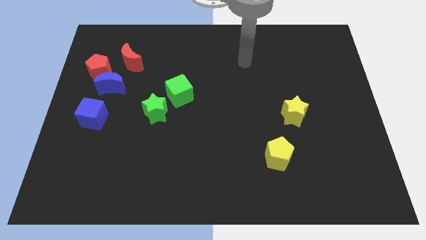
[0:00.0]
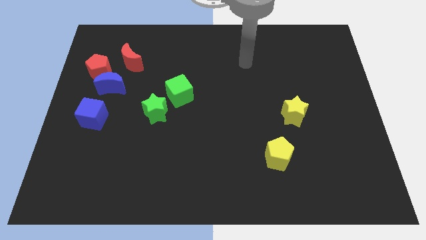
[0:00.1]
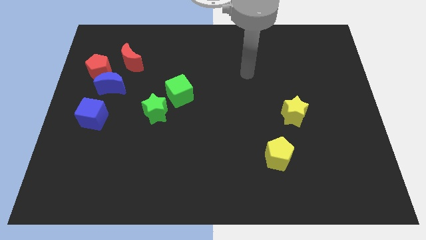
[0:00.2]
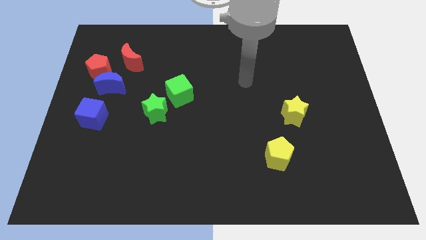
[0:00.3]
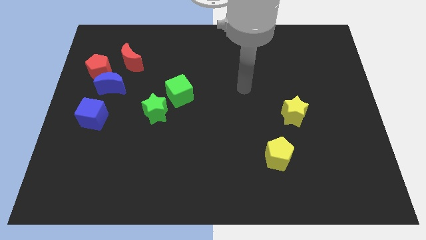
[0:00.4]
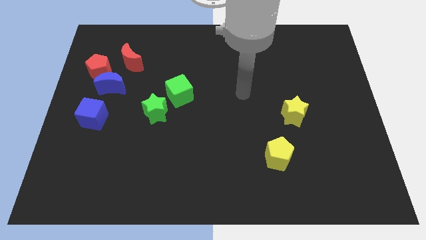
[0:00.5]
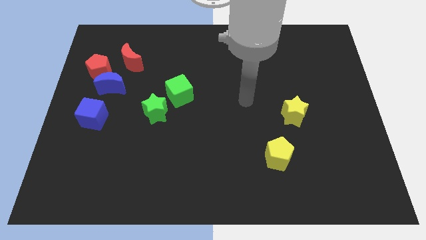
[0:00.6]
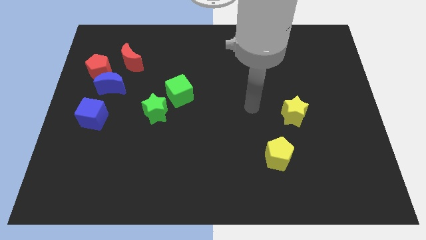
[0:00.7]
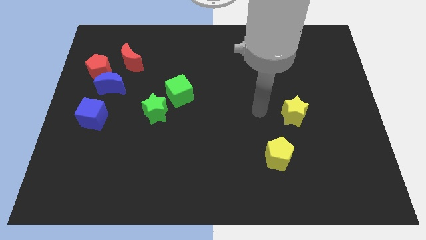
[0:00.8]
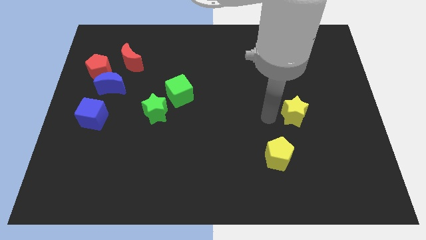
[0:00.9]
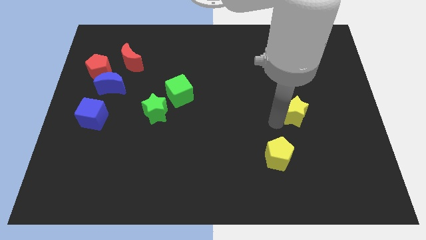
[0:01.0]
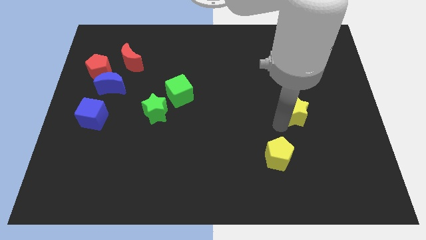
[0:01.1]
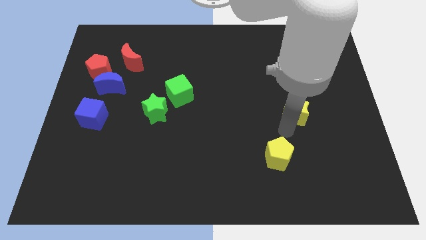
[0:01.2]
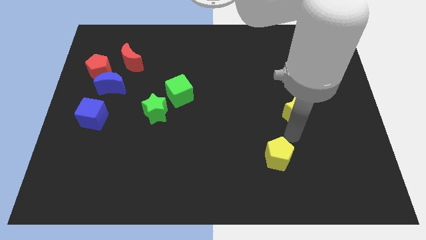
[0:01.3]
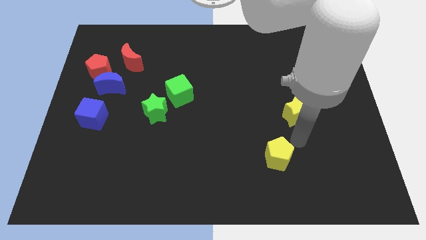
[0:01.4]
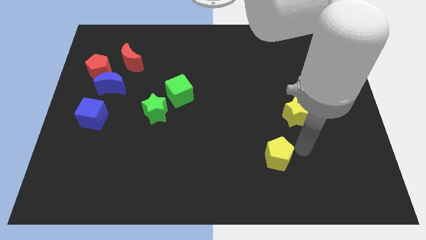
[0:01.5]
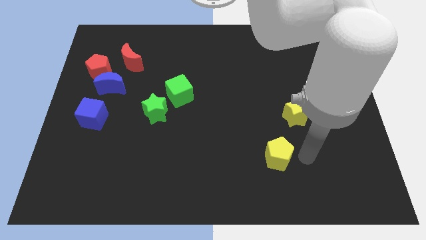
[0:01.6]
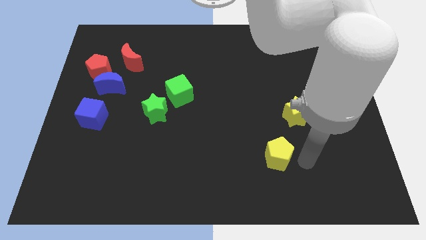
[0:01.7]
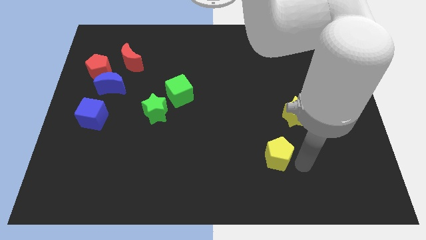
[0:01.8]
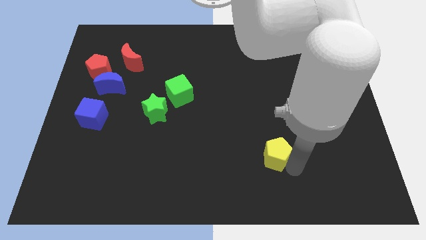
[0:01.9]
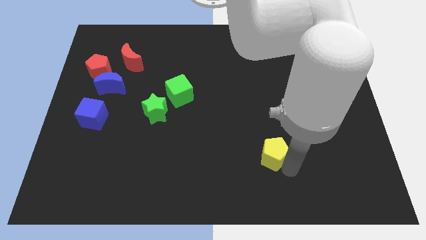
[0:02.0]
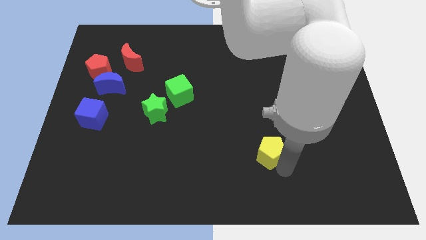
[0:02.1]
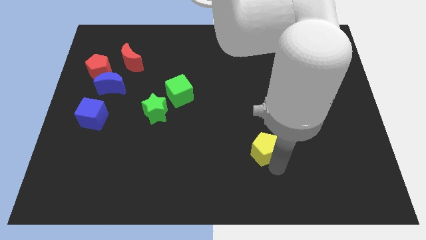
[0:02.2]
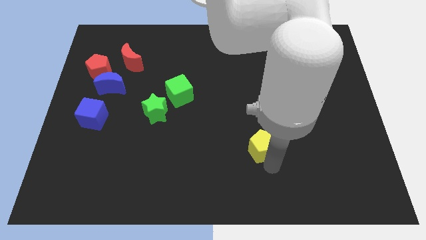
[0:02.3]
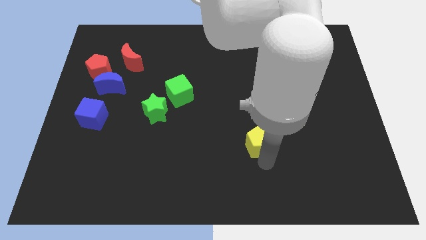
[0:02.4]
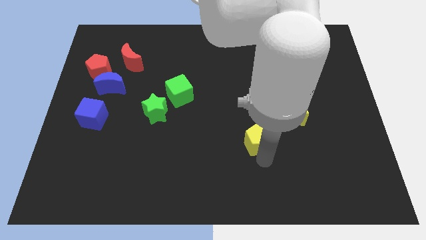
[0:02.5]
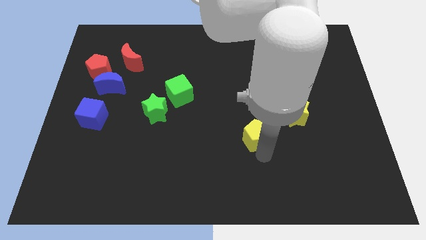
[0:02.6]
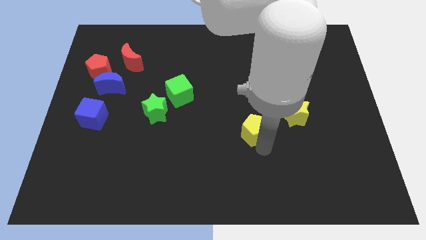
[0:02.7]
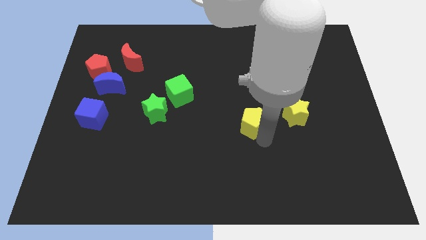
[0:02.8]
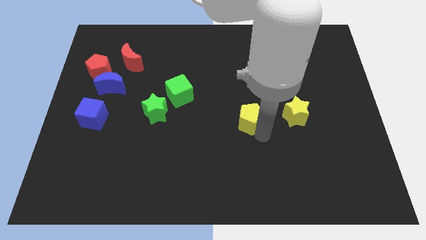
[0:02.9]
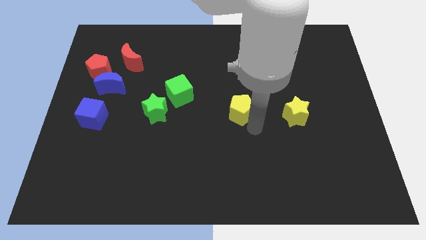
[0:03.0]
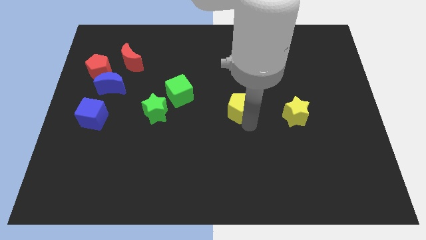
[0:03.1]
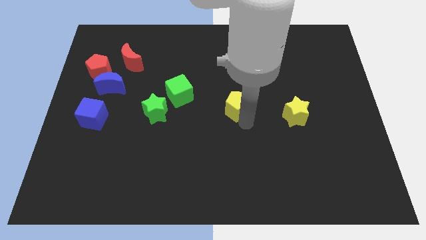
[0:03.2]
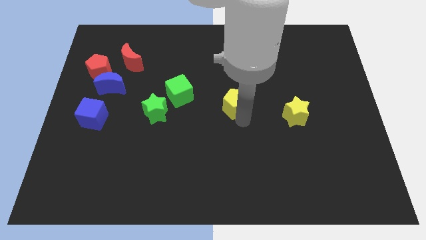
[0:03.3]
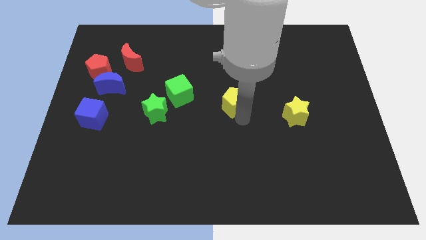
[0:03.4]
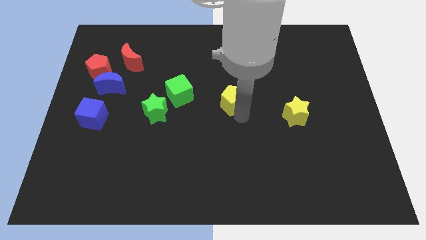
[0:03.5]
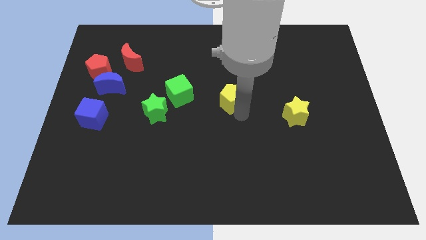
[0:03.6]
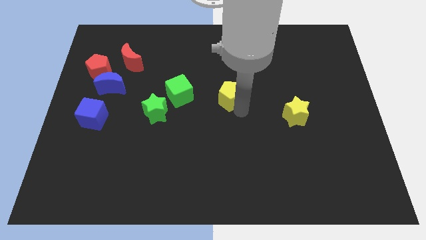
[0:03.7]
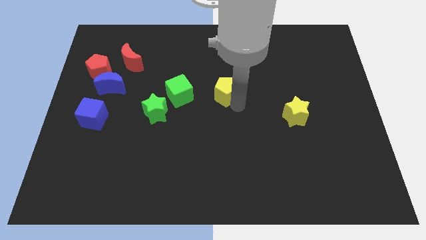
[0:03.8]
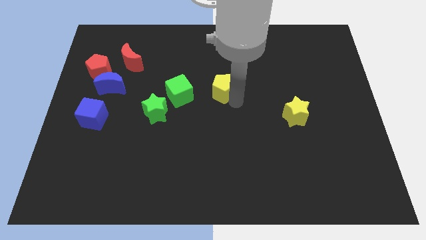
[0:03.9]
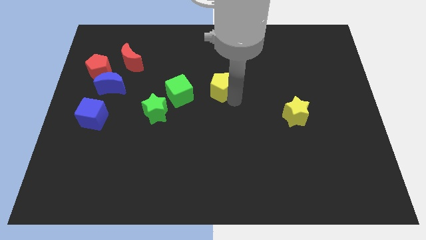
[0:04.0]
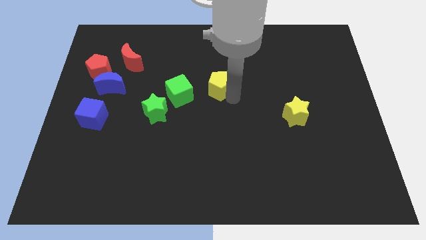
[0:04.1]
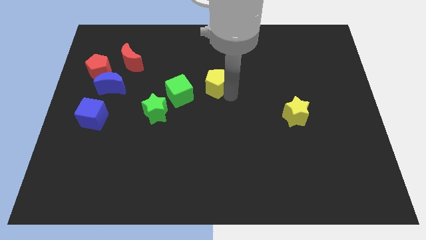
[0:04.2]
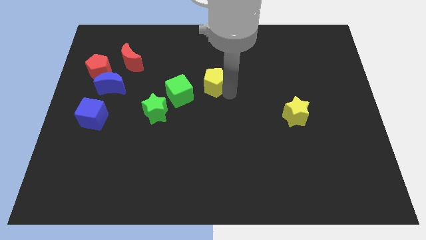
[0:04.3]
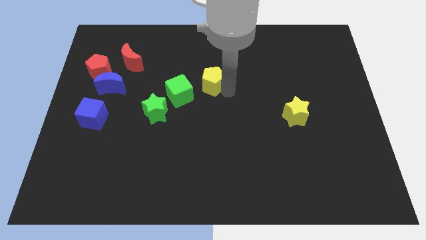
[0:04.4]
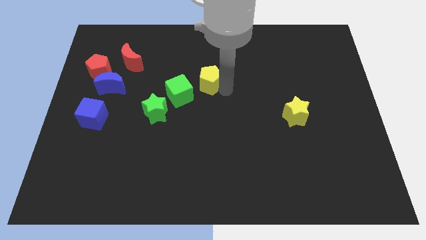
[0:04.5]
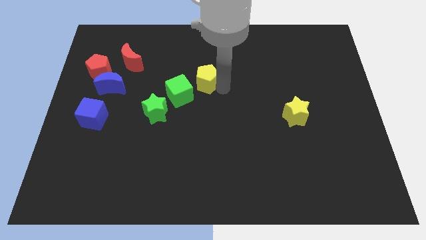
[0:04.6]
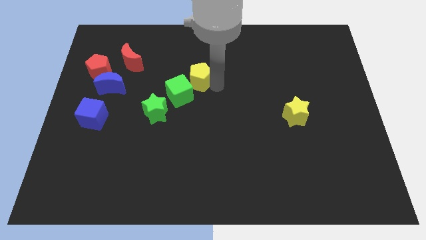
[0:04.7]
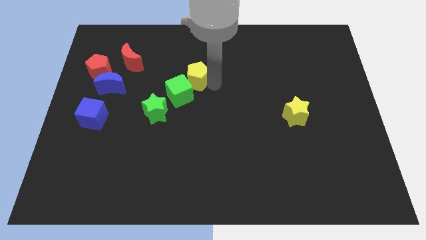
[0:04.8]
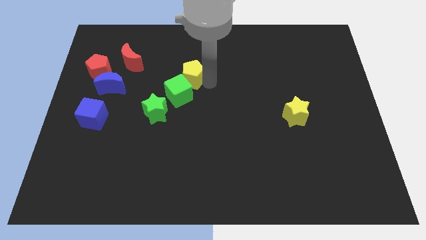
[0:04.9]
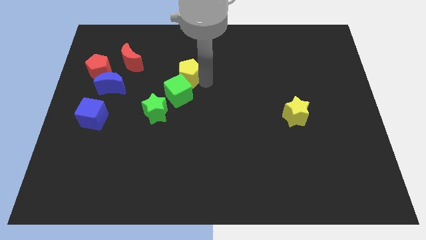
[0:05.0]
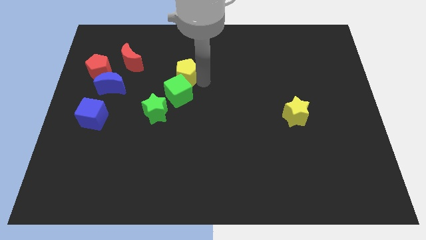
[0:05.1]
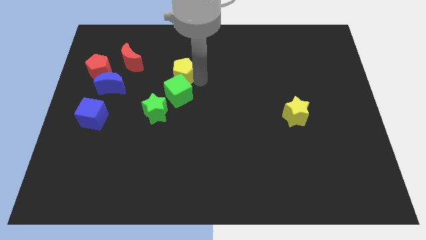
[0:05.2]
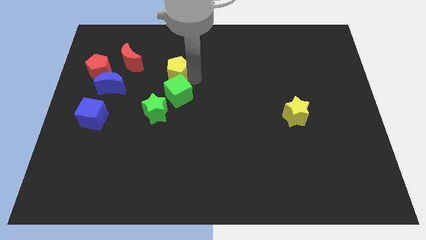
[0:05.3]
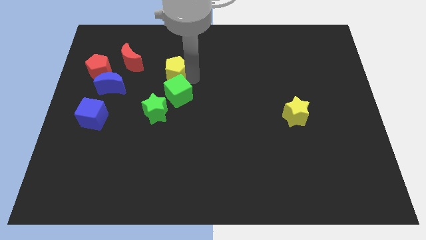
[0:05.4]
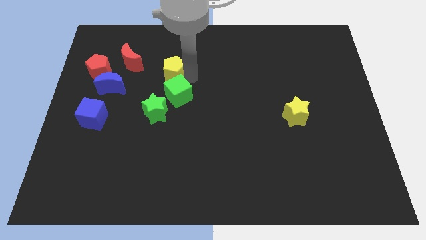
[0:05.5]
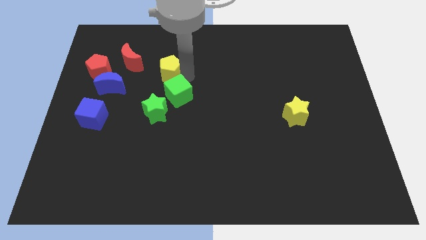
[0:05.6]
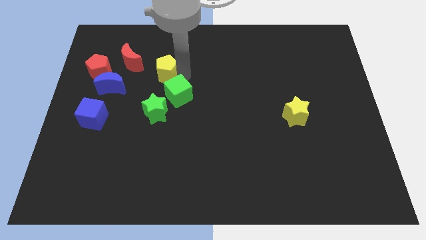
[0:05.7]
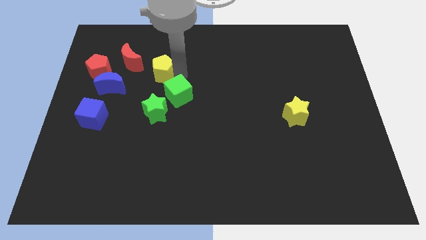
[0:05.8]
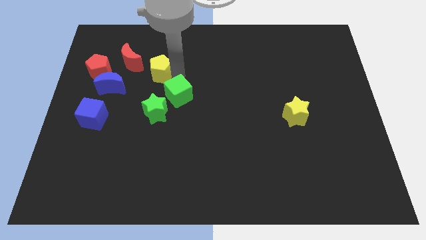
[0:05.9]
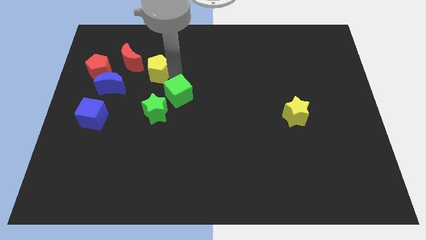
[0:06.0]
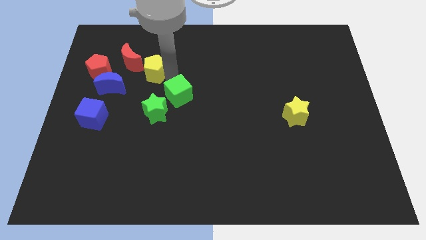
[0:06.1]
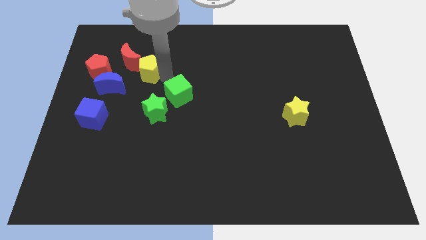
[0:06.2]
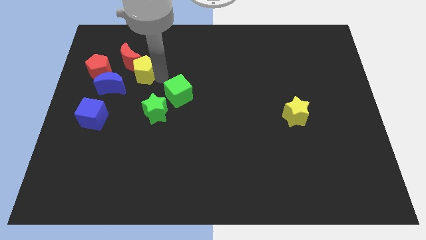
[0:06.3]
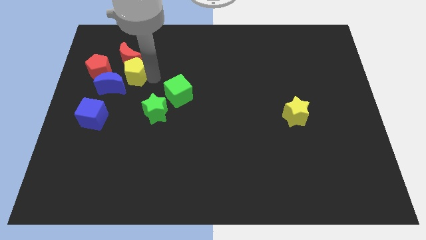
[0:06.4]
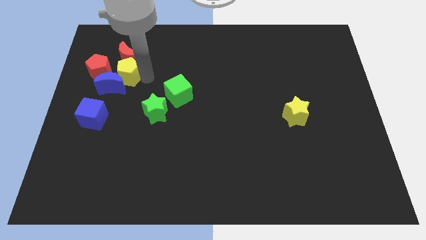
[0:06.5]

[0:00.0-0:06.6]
push the yellow pentagon towards the red moon

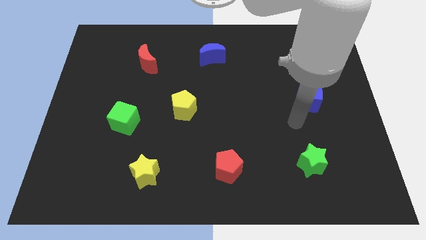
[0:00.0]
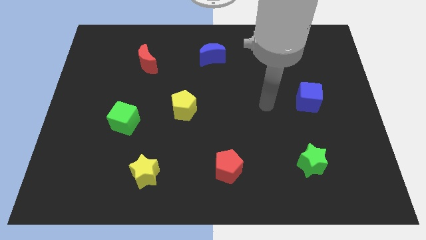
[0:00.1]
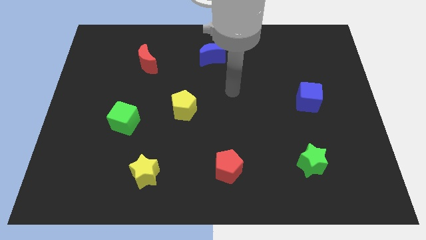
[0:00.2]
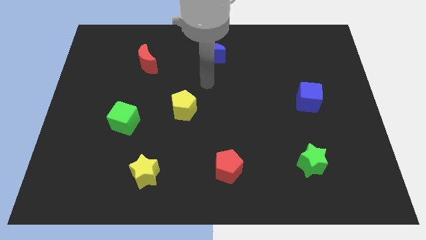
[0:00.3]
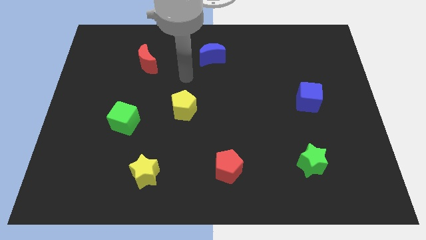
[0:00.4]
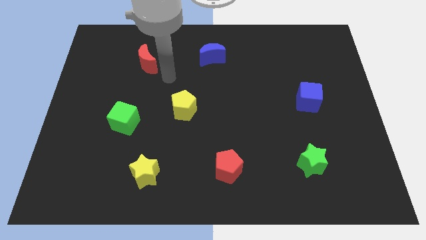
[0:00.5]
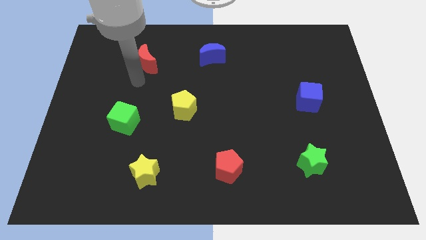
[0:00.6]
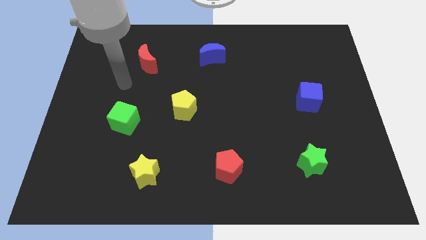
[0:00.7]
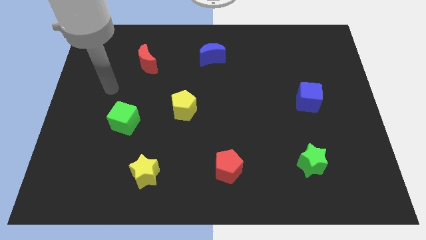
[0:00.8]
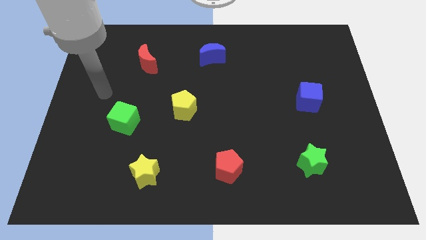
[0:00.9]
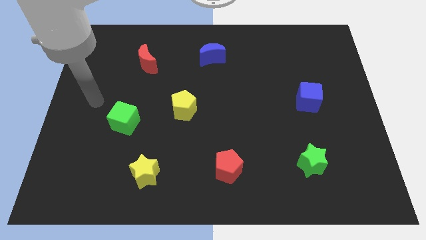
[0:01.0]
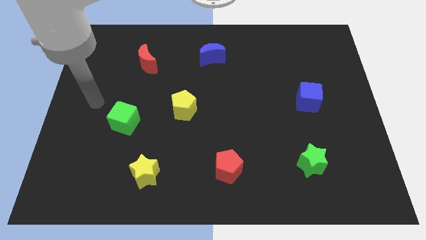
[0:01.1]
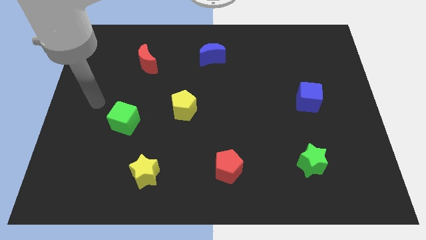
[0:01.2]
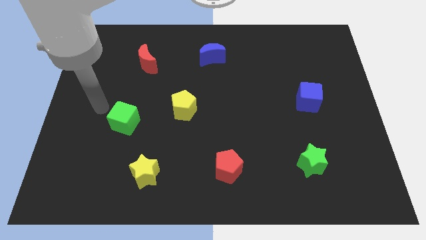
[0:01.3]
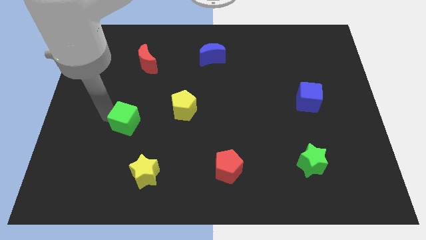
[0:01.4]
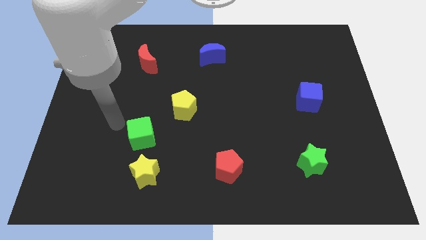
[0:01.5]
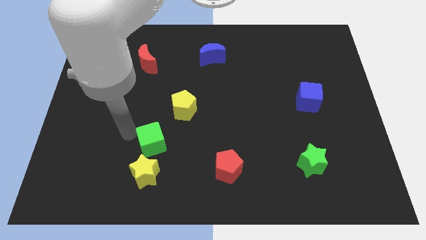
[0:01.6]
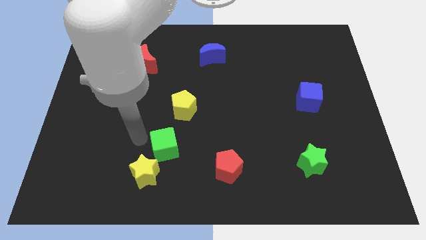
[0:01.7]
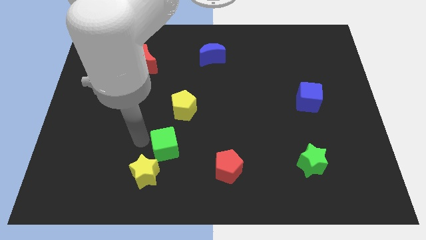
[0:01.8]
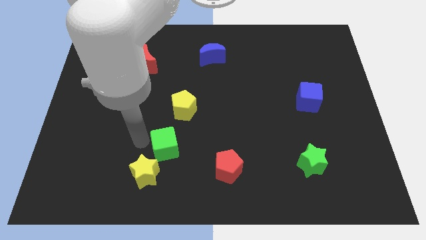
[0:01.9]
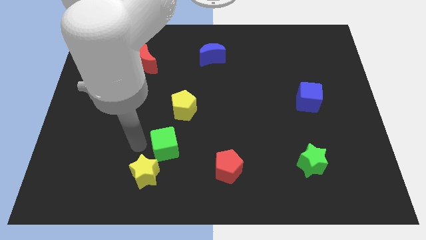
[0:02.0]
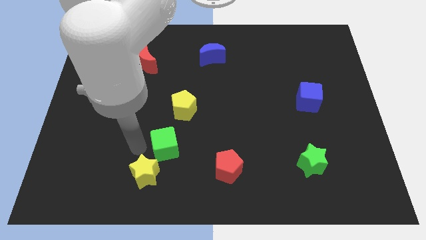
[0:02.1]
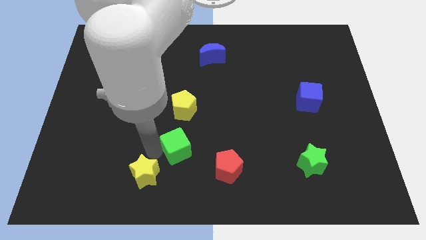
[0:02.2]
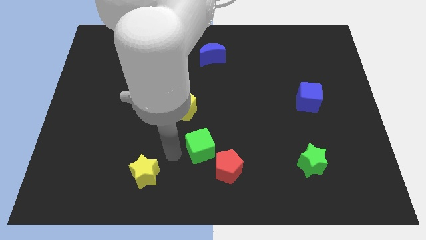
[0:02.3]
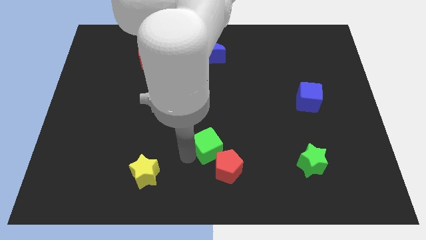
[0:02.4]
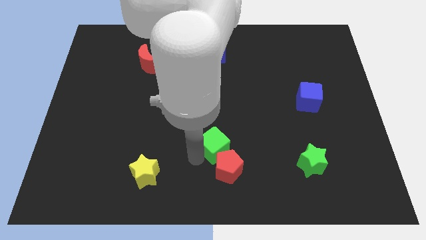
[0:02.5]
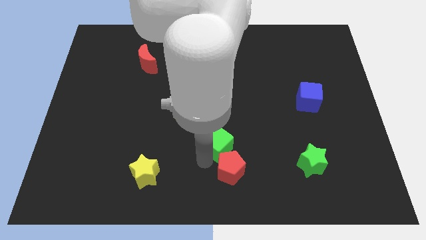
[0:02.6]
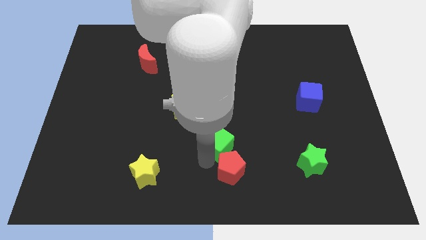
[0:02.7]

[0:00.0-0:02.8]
put the green cube towards the red pentagon
